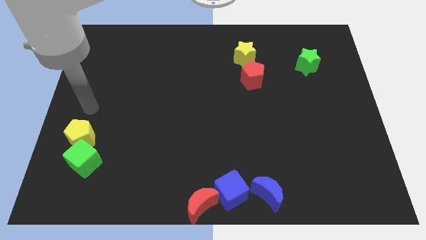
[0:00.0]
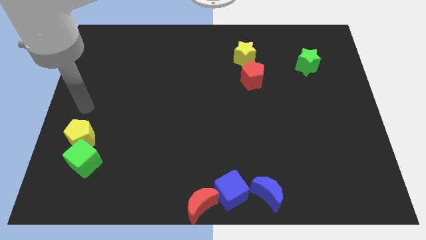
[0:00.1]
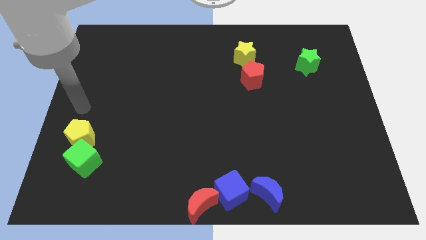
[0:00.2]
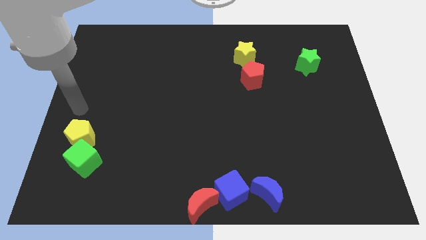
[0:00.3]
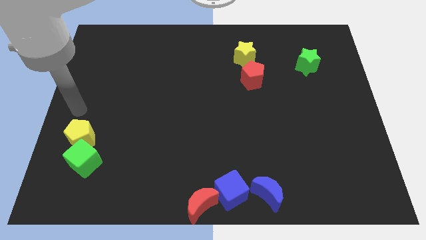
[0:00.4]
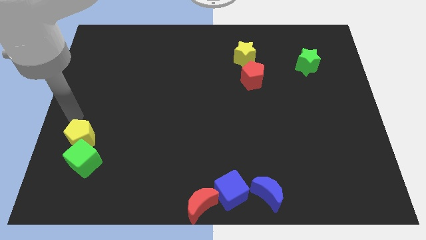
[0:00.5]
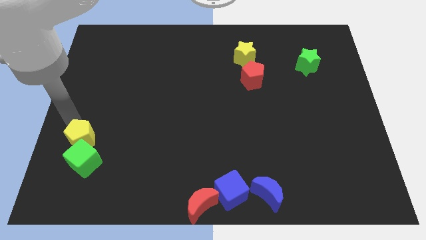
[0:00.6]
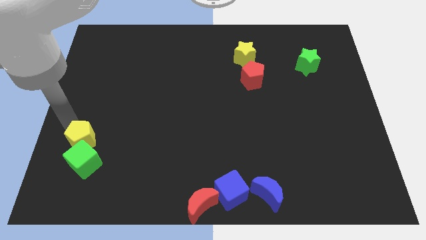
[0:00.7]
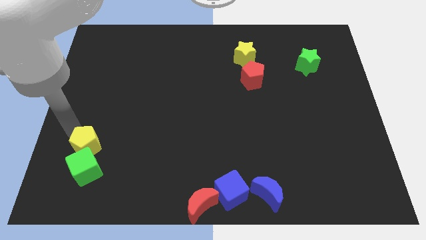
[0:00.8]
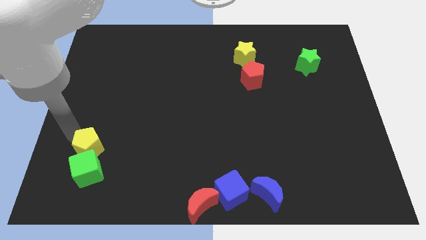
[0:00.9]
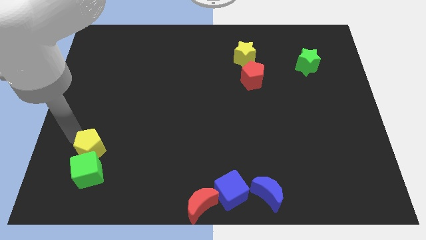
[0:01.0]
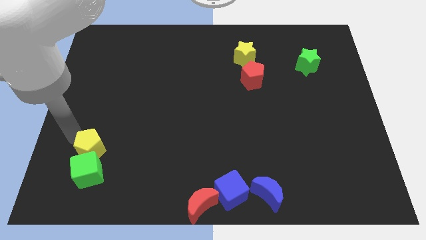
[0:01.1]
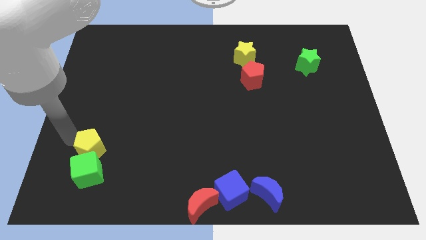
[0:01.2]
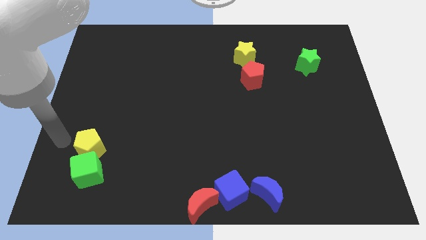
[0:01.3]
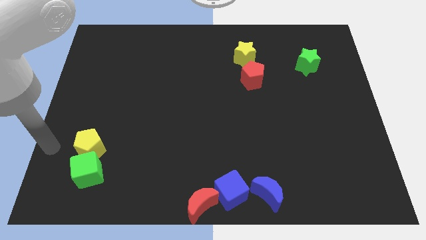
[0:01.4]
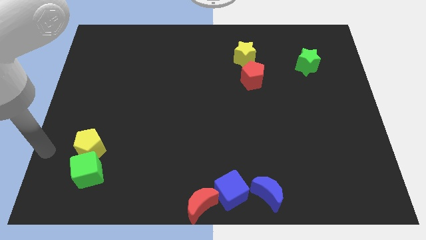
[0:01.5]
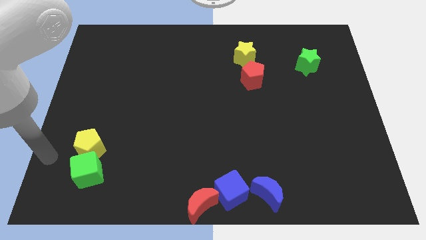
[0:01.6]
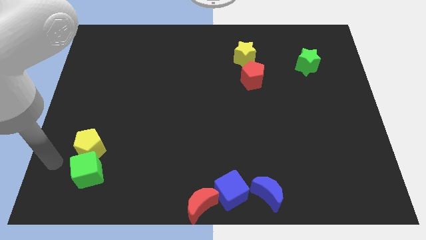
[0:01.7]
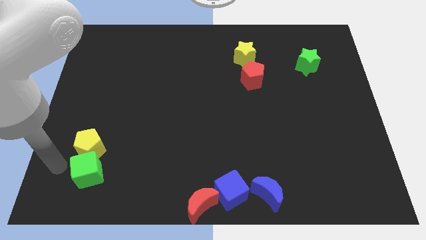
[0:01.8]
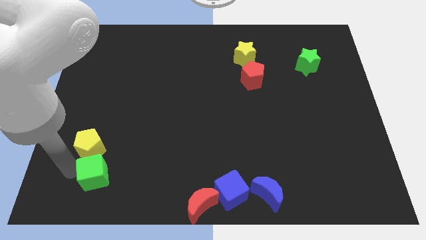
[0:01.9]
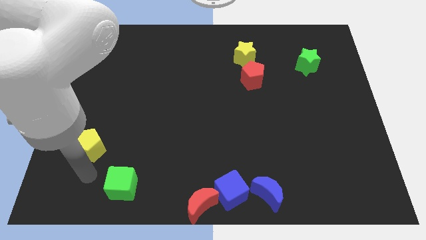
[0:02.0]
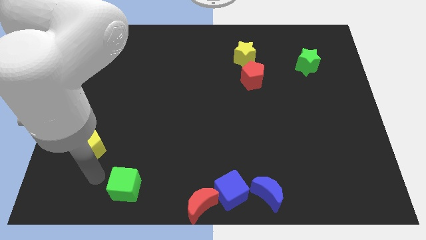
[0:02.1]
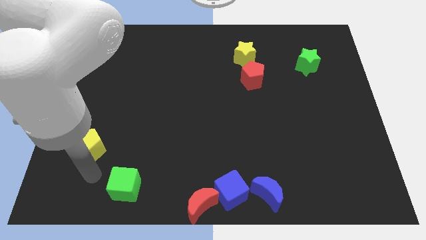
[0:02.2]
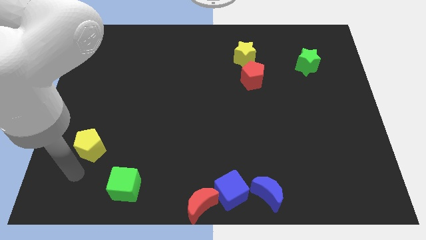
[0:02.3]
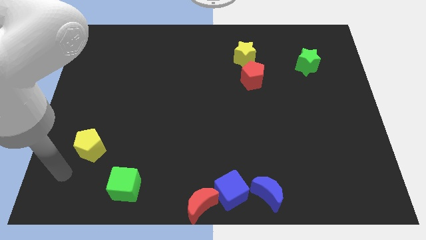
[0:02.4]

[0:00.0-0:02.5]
place the green cube to the right side of the board

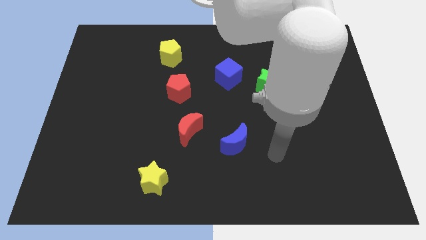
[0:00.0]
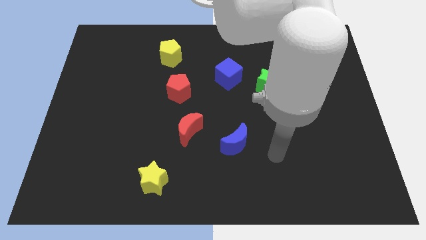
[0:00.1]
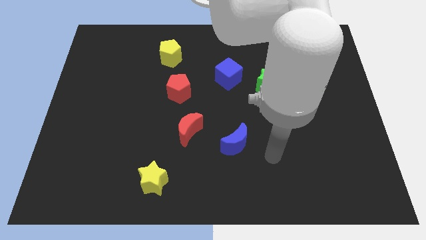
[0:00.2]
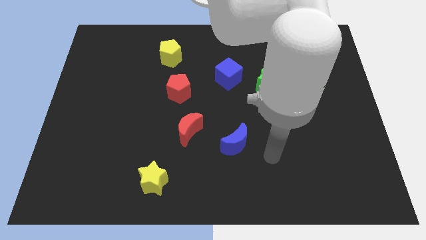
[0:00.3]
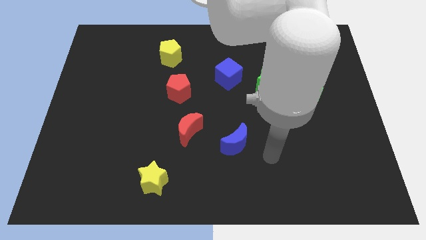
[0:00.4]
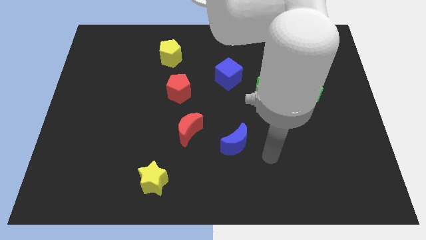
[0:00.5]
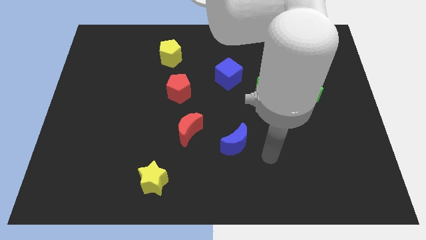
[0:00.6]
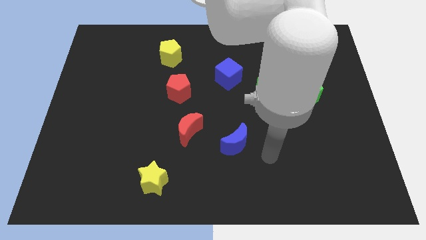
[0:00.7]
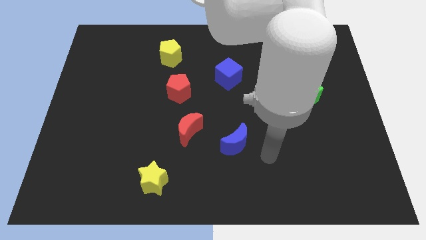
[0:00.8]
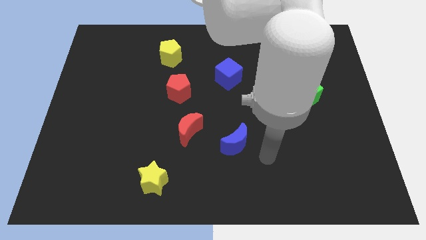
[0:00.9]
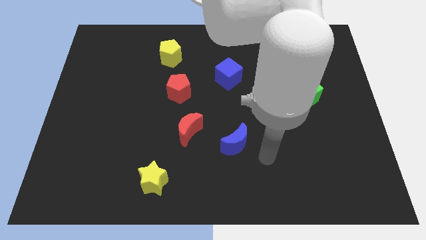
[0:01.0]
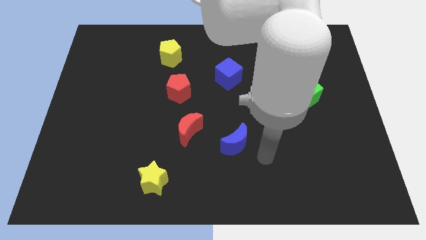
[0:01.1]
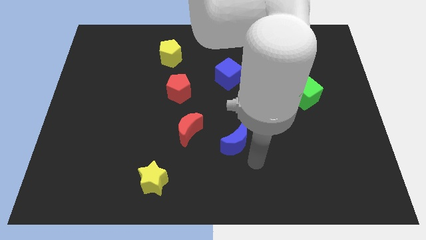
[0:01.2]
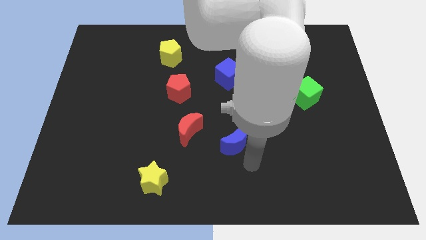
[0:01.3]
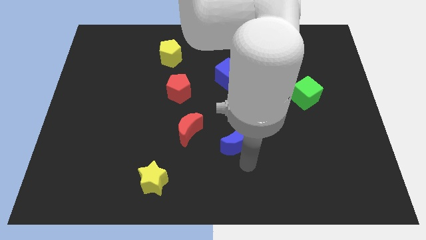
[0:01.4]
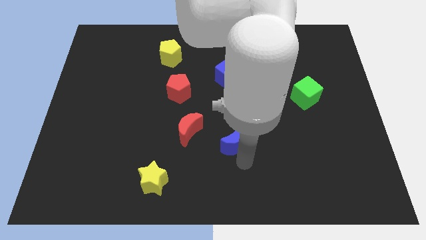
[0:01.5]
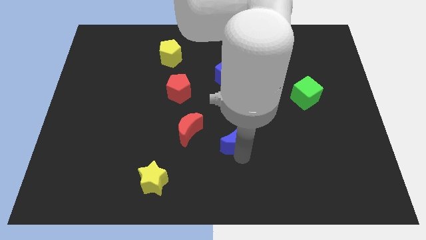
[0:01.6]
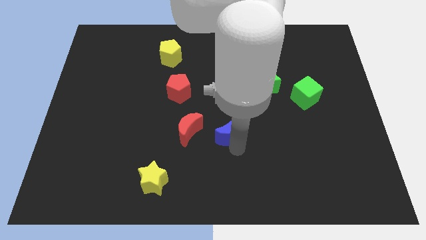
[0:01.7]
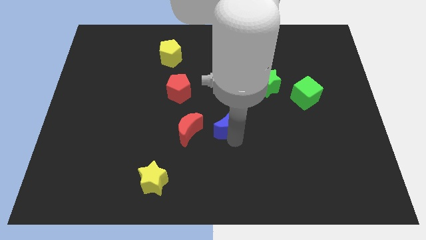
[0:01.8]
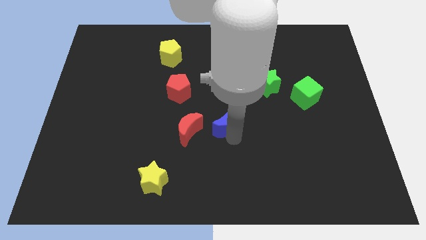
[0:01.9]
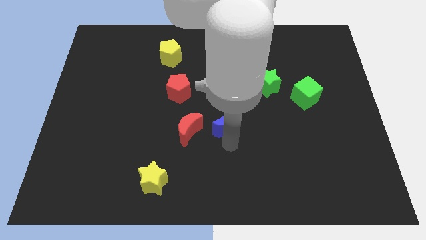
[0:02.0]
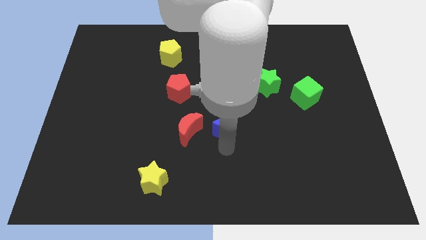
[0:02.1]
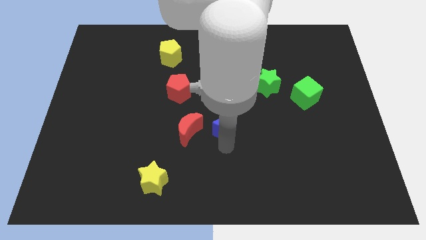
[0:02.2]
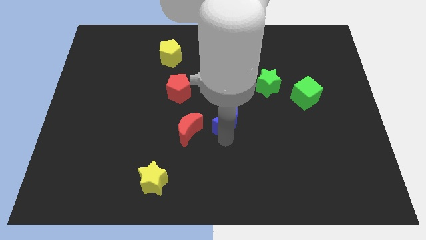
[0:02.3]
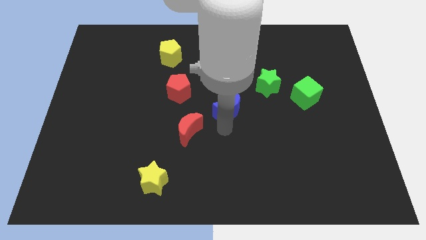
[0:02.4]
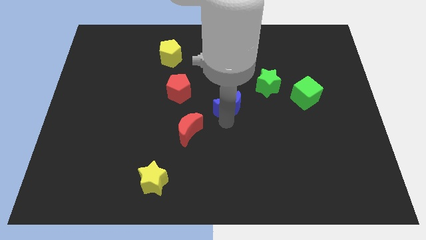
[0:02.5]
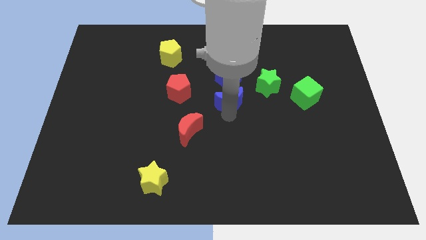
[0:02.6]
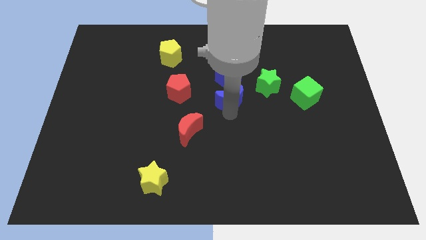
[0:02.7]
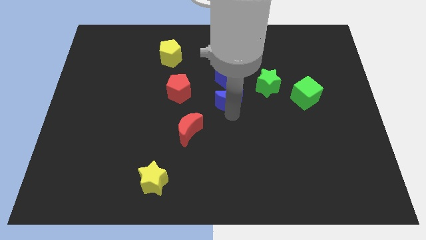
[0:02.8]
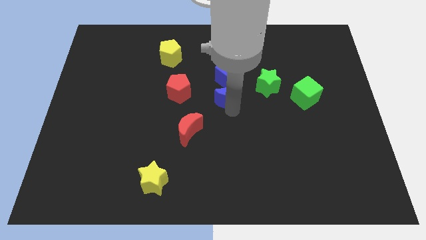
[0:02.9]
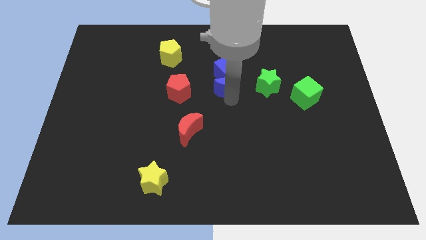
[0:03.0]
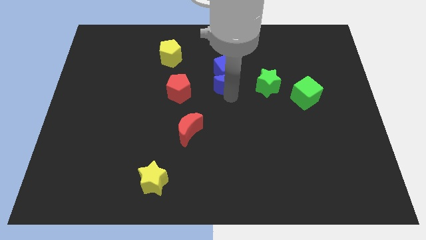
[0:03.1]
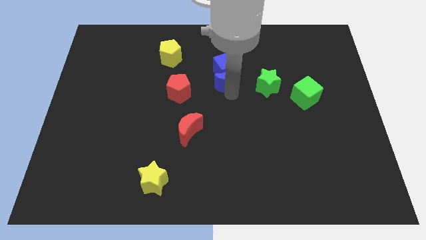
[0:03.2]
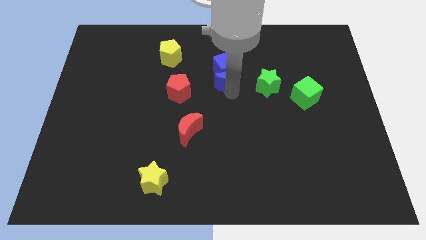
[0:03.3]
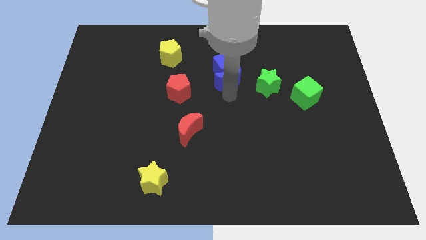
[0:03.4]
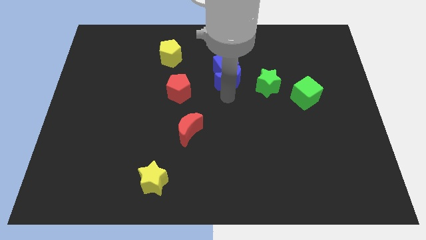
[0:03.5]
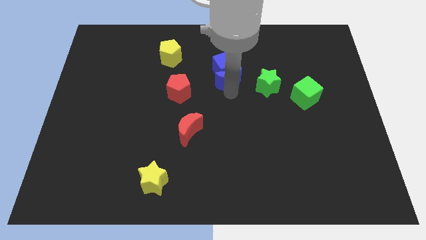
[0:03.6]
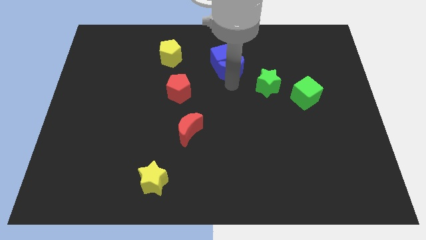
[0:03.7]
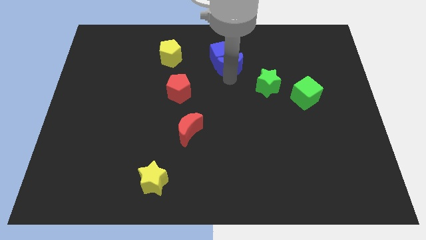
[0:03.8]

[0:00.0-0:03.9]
push the blue moon into the blue cube

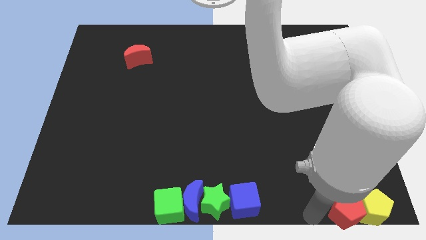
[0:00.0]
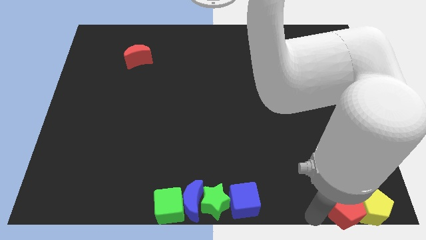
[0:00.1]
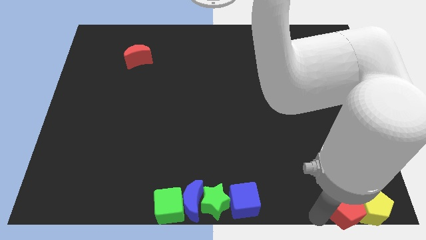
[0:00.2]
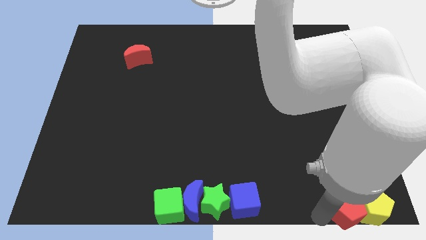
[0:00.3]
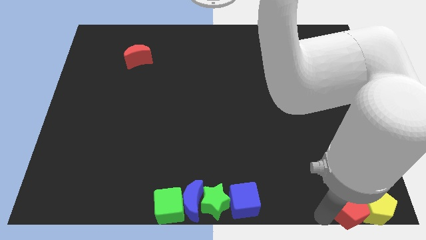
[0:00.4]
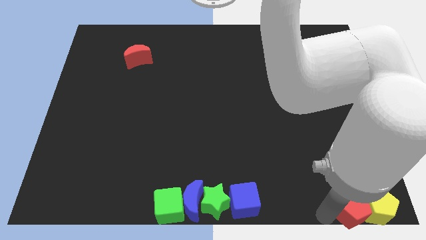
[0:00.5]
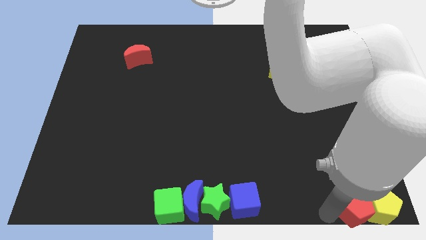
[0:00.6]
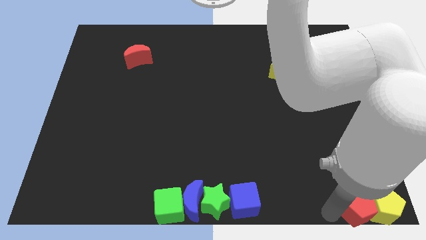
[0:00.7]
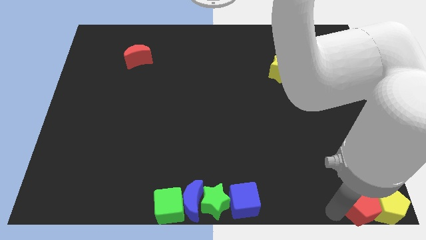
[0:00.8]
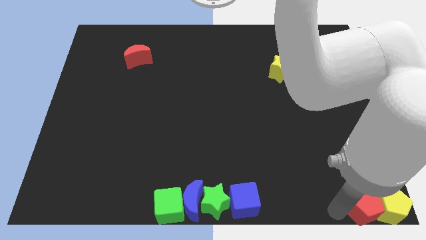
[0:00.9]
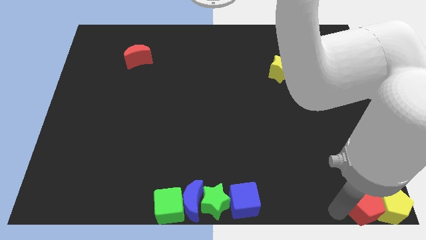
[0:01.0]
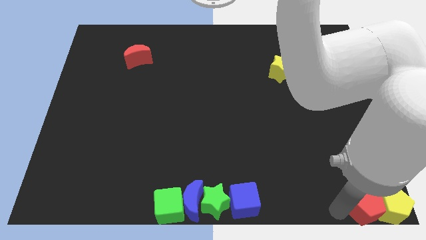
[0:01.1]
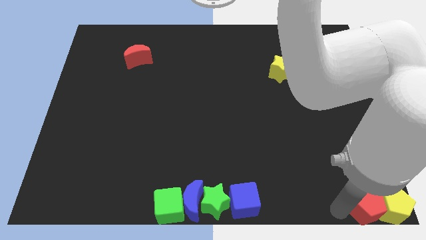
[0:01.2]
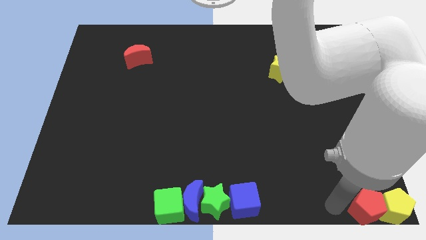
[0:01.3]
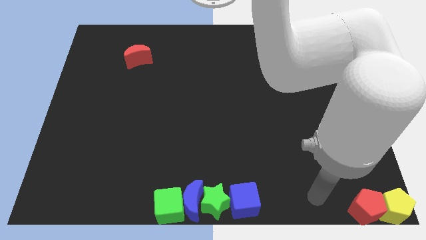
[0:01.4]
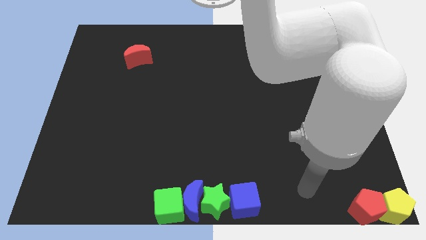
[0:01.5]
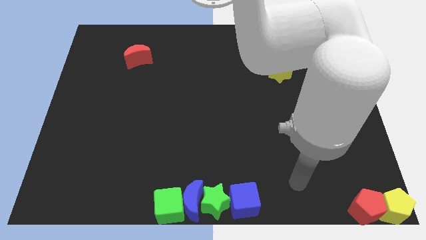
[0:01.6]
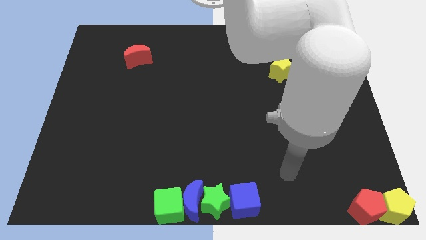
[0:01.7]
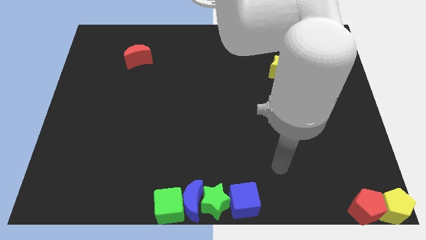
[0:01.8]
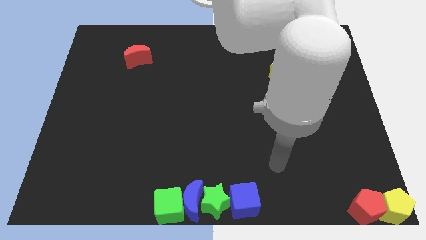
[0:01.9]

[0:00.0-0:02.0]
move pentagons to the bottom right corner of the board

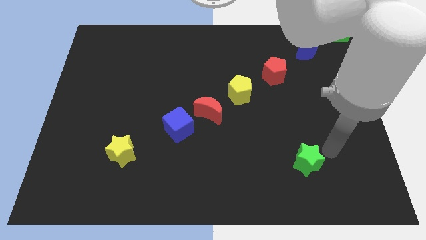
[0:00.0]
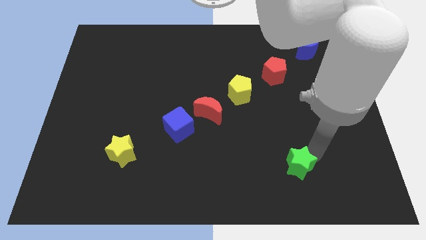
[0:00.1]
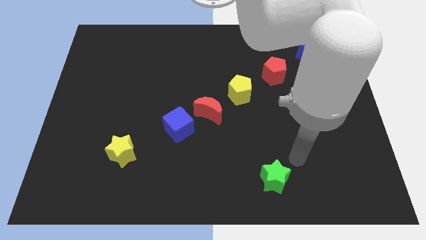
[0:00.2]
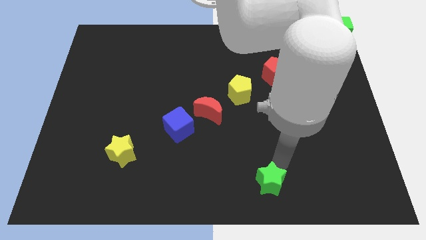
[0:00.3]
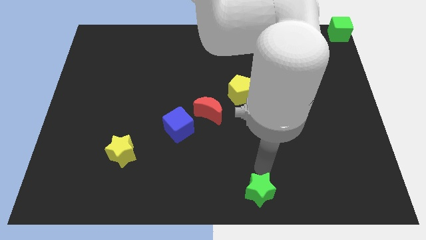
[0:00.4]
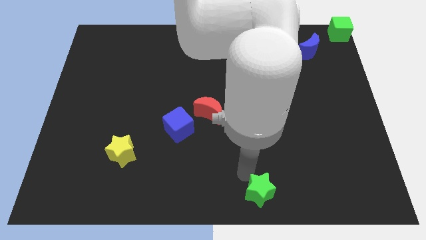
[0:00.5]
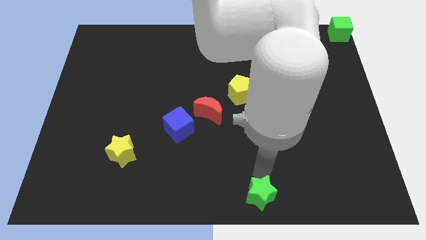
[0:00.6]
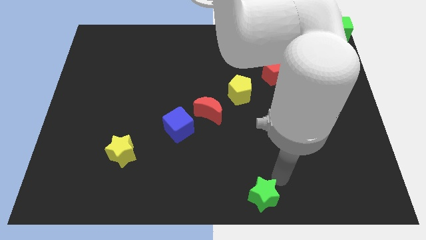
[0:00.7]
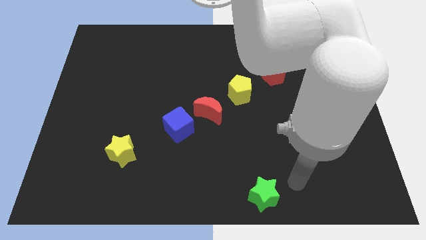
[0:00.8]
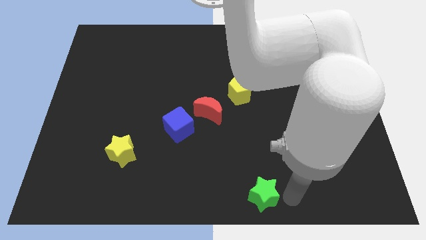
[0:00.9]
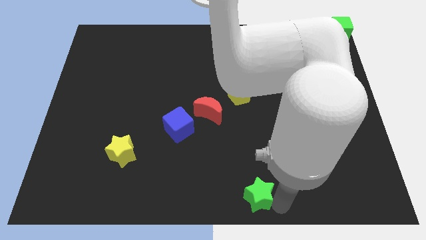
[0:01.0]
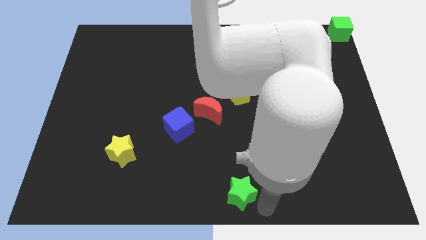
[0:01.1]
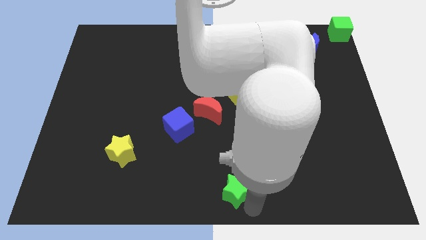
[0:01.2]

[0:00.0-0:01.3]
drag the green star diagonal to the red moon
